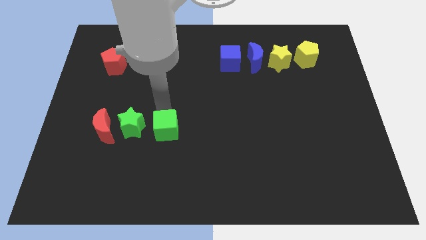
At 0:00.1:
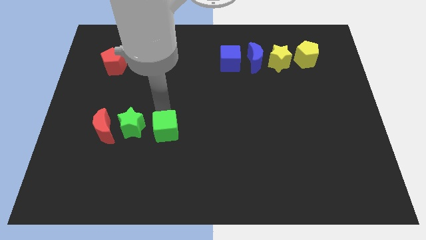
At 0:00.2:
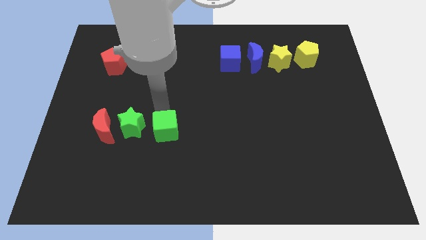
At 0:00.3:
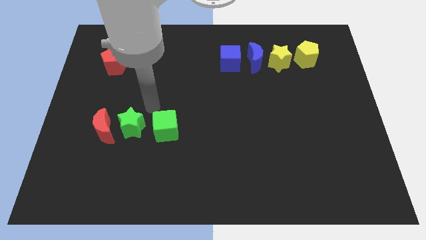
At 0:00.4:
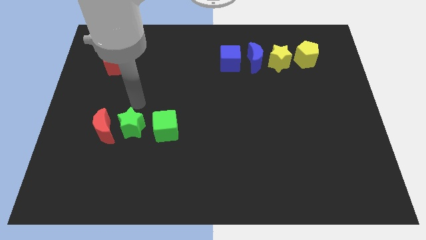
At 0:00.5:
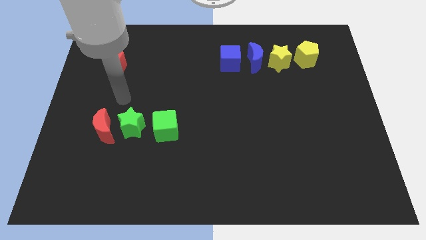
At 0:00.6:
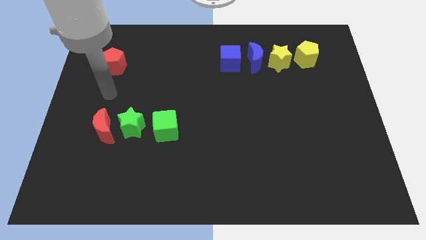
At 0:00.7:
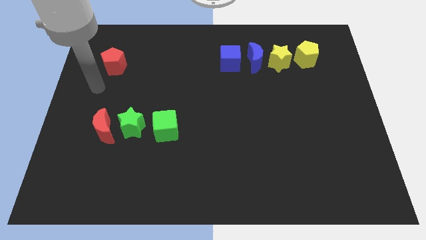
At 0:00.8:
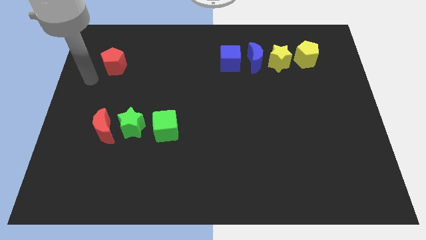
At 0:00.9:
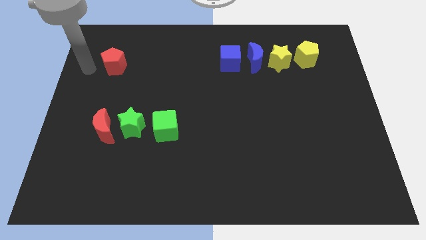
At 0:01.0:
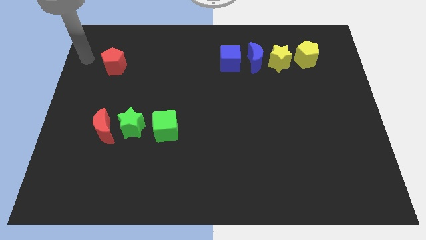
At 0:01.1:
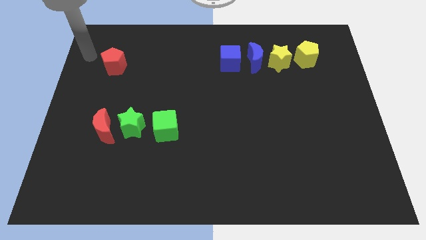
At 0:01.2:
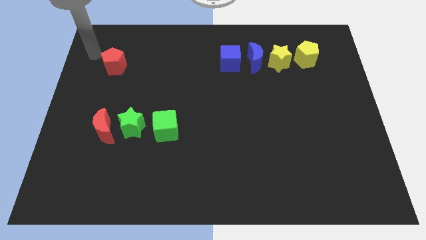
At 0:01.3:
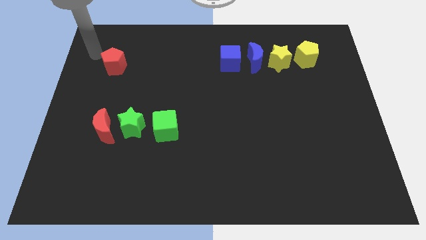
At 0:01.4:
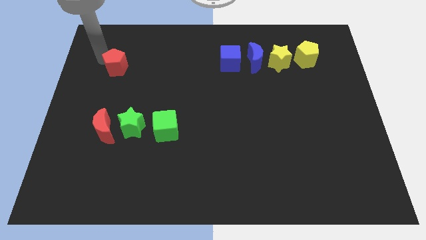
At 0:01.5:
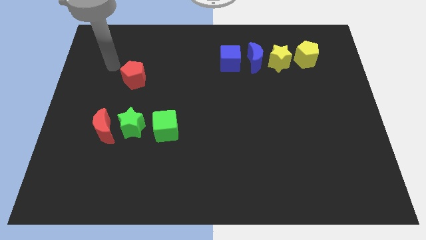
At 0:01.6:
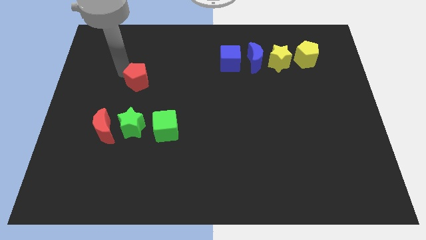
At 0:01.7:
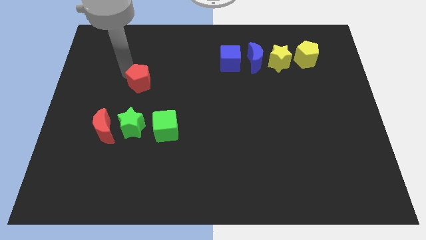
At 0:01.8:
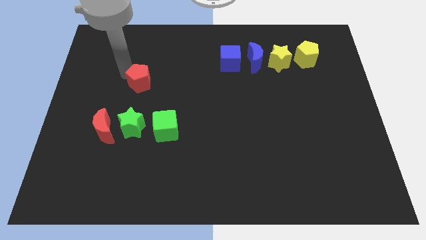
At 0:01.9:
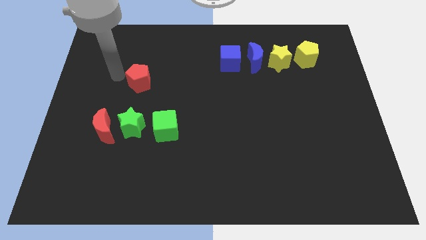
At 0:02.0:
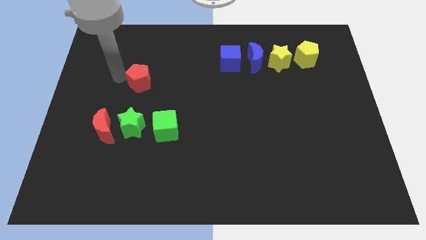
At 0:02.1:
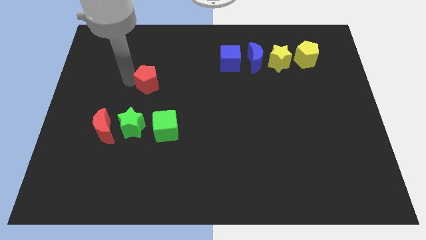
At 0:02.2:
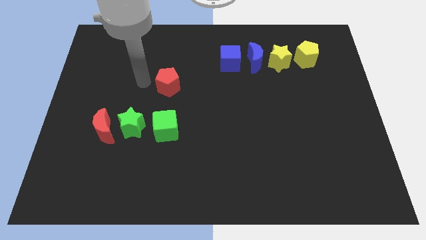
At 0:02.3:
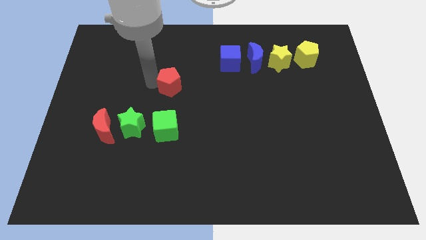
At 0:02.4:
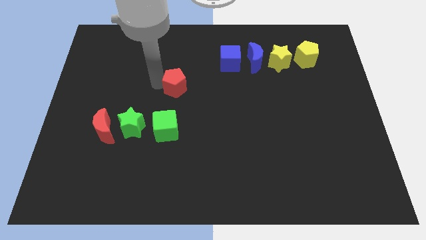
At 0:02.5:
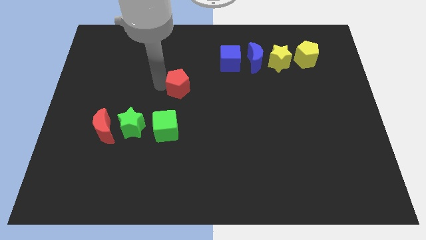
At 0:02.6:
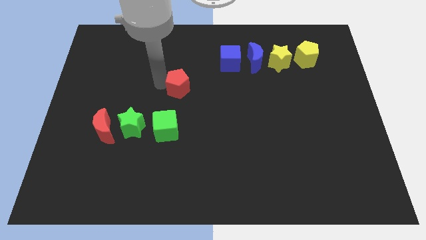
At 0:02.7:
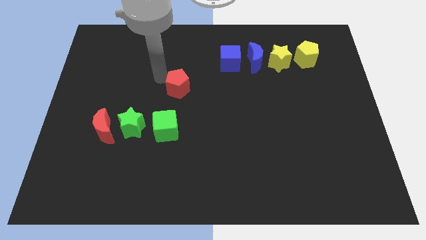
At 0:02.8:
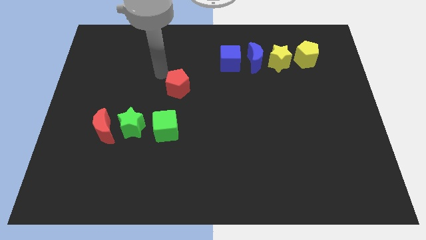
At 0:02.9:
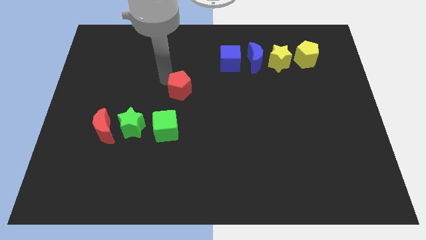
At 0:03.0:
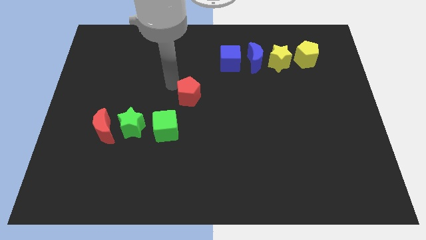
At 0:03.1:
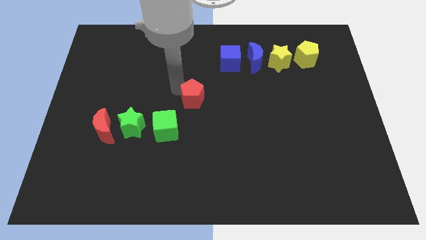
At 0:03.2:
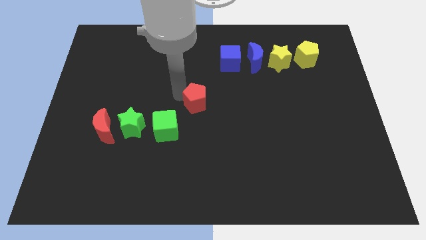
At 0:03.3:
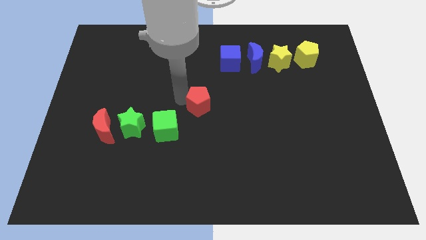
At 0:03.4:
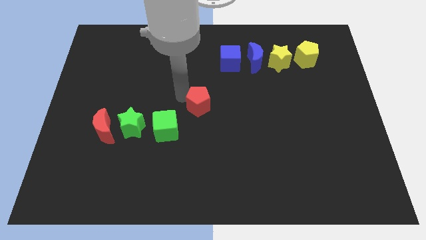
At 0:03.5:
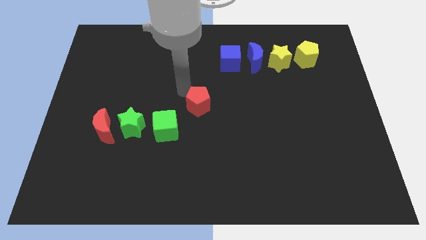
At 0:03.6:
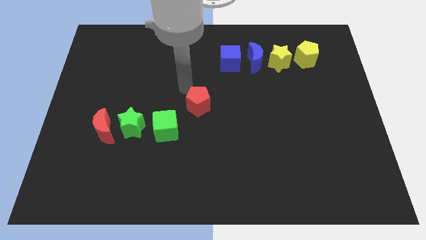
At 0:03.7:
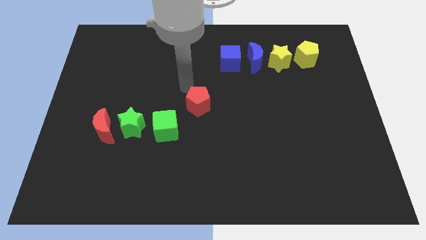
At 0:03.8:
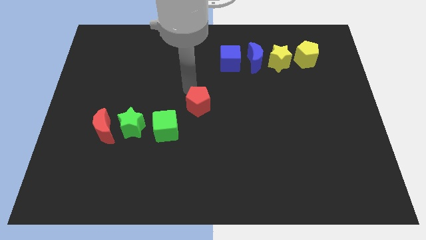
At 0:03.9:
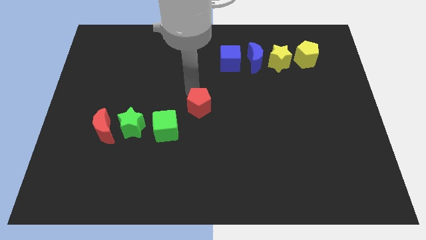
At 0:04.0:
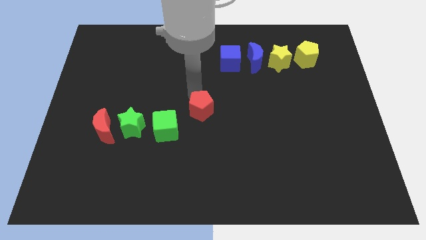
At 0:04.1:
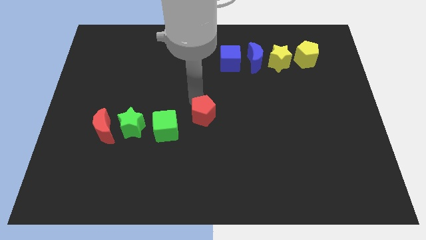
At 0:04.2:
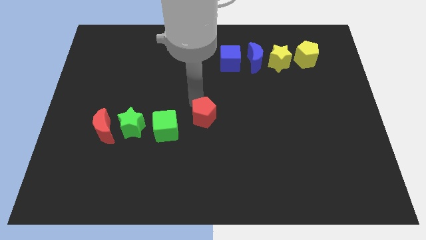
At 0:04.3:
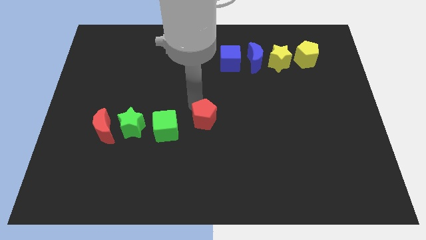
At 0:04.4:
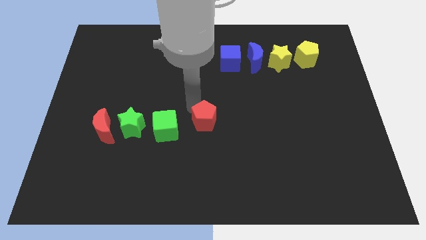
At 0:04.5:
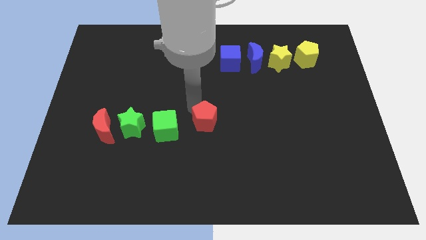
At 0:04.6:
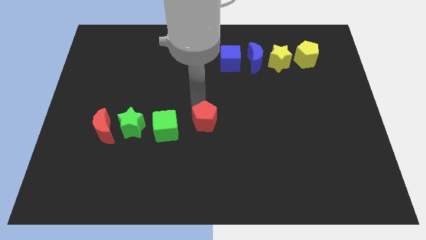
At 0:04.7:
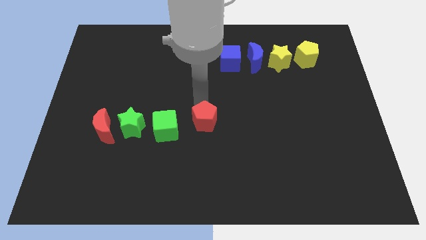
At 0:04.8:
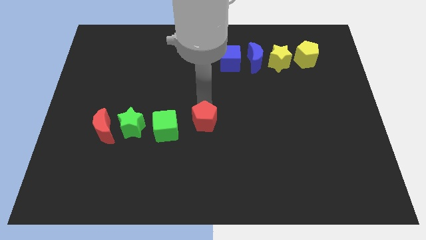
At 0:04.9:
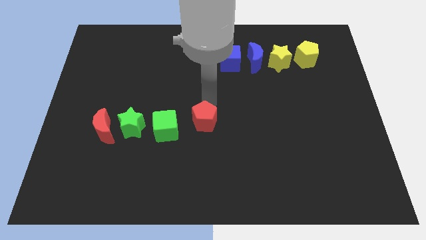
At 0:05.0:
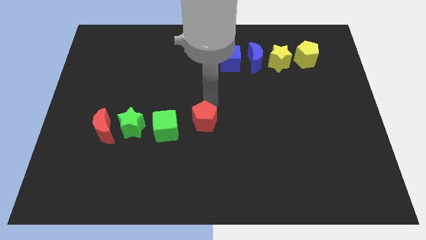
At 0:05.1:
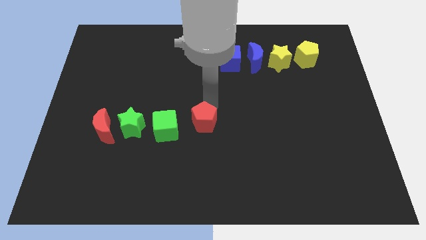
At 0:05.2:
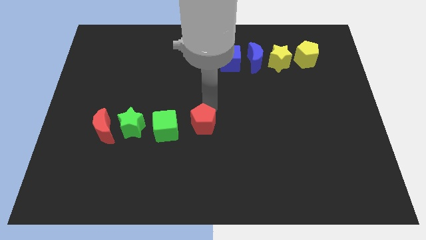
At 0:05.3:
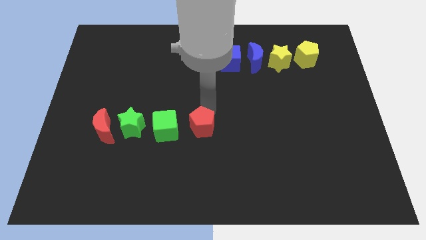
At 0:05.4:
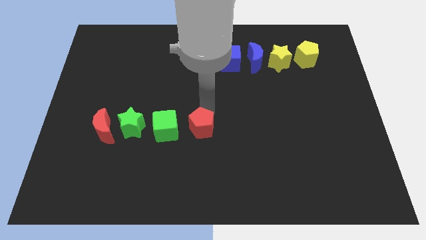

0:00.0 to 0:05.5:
place the red pentagon to the right of the green cube

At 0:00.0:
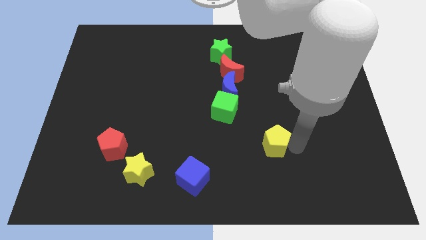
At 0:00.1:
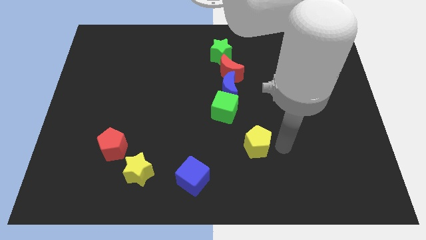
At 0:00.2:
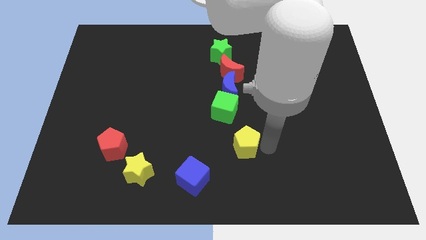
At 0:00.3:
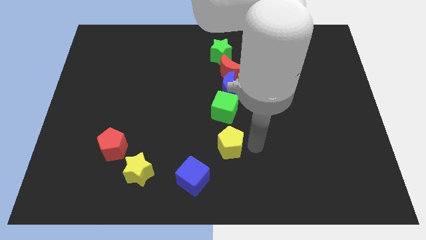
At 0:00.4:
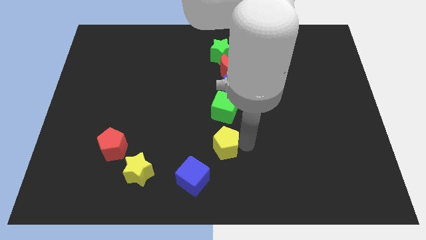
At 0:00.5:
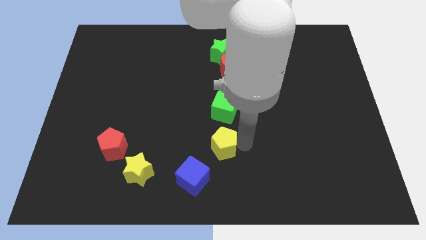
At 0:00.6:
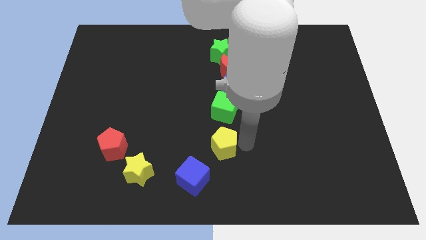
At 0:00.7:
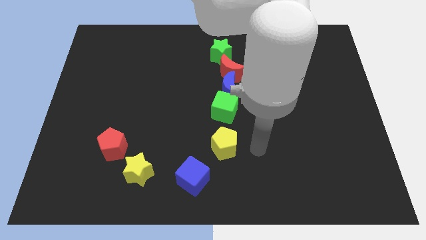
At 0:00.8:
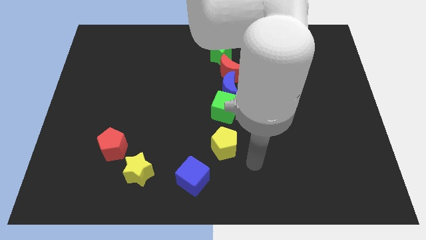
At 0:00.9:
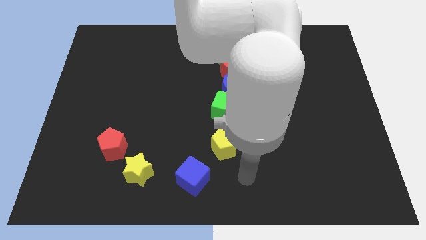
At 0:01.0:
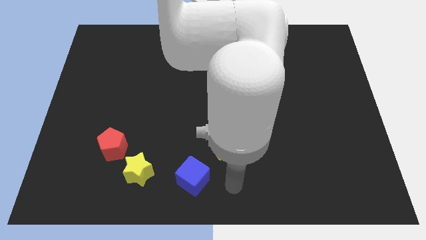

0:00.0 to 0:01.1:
push yellow pentagon below the green cube

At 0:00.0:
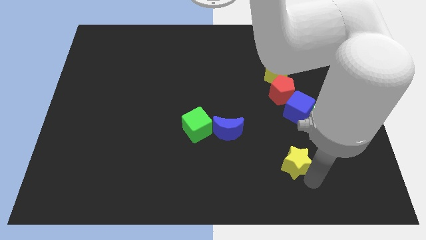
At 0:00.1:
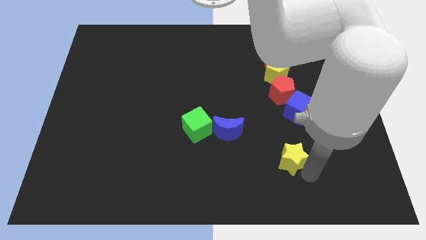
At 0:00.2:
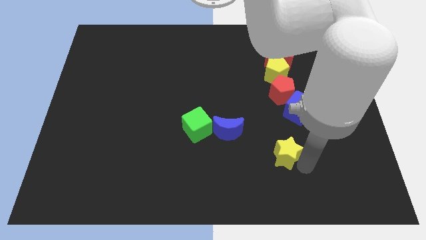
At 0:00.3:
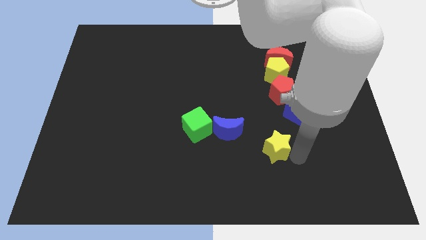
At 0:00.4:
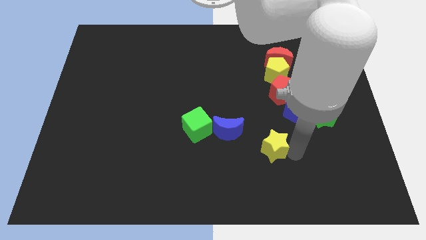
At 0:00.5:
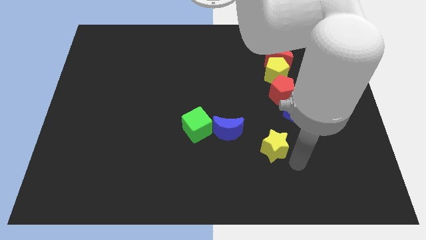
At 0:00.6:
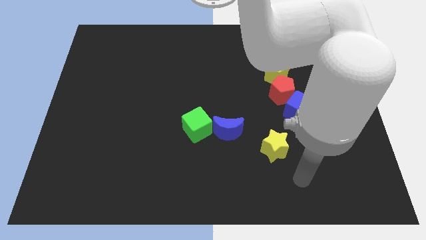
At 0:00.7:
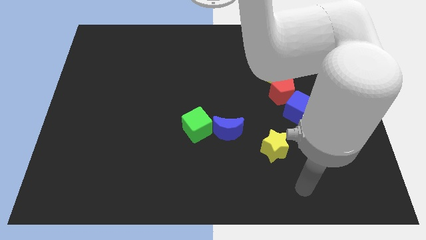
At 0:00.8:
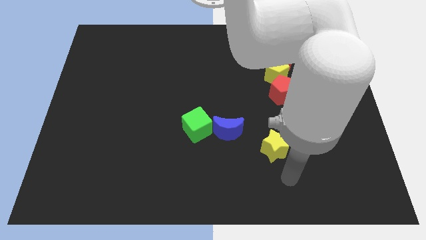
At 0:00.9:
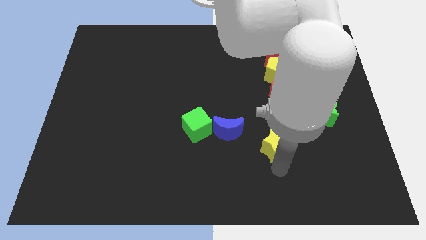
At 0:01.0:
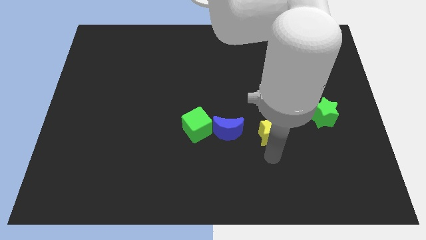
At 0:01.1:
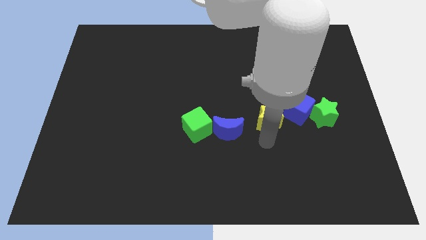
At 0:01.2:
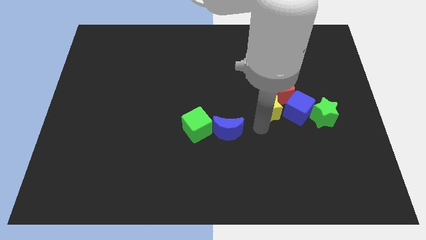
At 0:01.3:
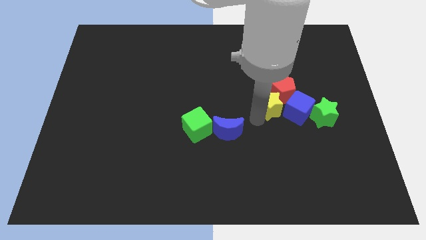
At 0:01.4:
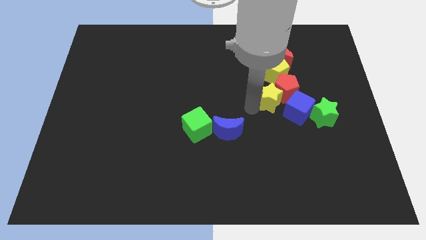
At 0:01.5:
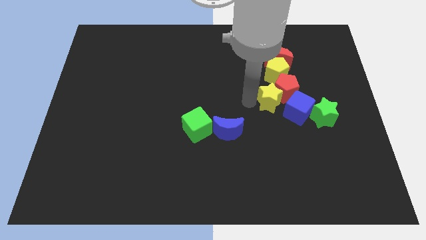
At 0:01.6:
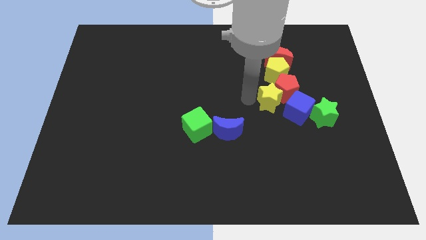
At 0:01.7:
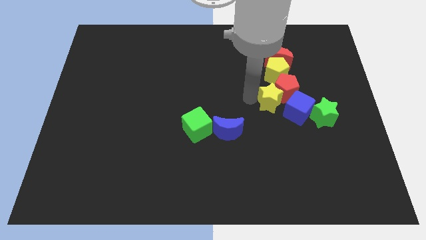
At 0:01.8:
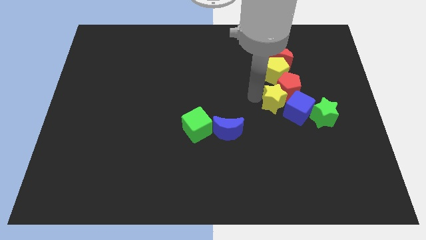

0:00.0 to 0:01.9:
push the yellow star into the red pentagon

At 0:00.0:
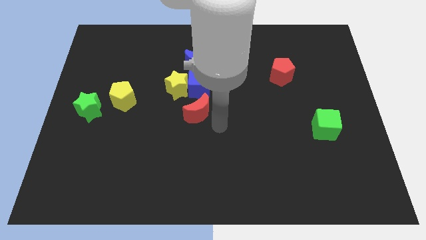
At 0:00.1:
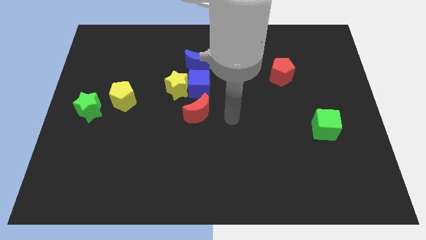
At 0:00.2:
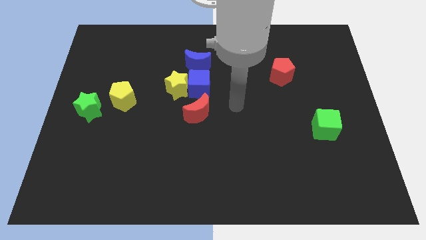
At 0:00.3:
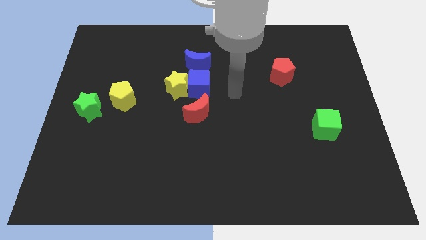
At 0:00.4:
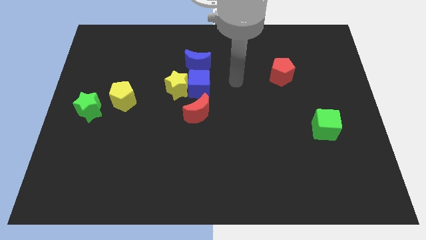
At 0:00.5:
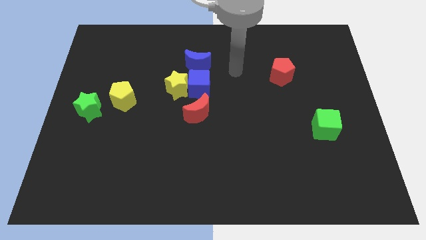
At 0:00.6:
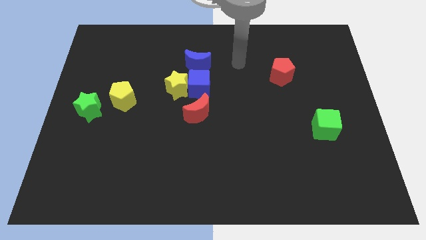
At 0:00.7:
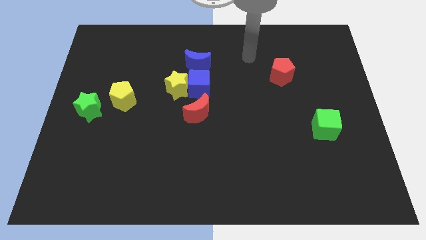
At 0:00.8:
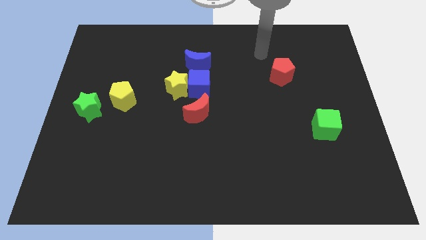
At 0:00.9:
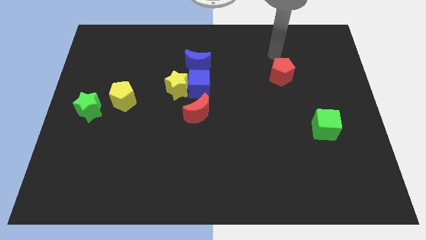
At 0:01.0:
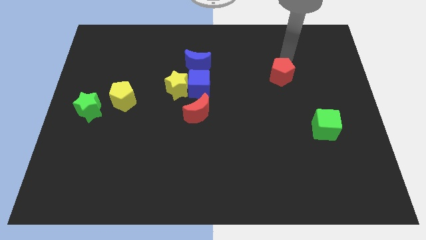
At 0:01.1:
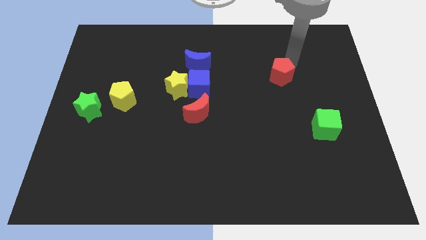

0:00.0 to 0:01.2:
move your arm away from red moon
